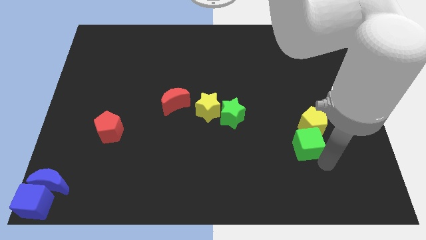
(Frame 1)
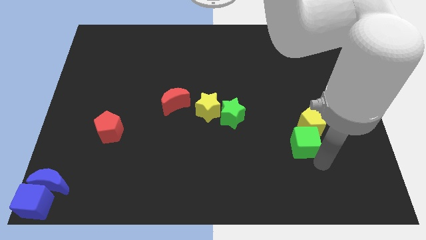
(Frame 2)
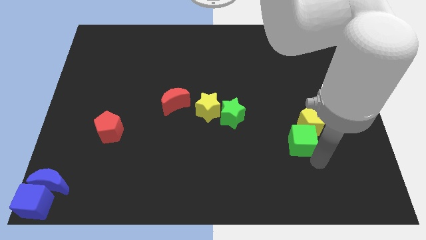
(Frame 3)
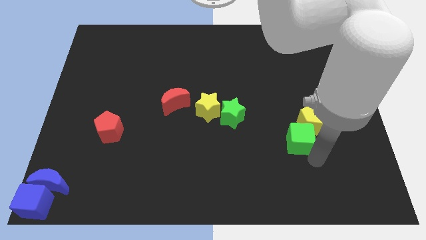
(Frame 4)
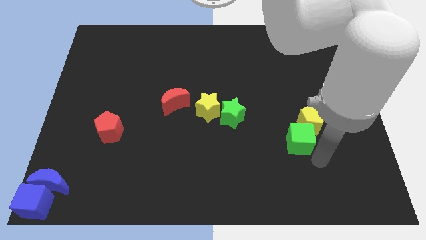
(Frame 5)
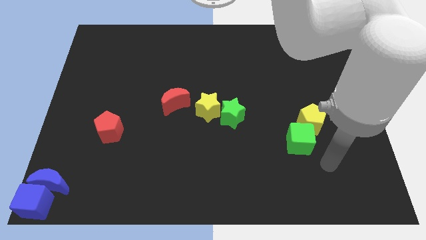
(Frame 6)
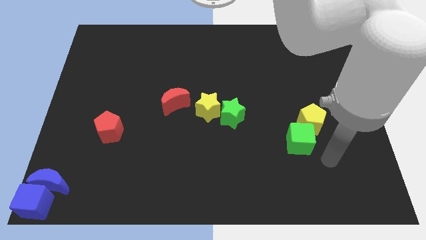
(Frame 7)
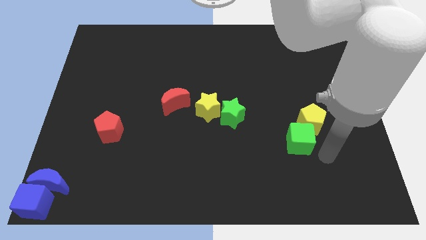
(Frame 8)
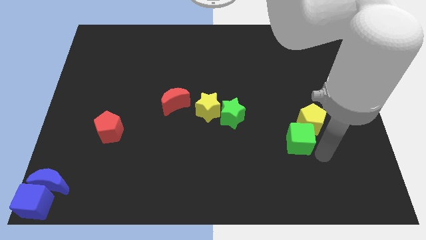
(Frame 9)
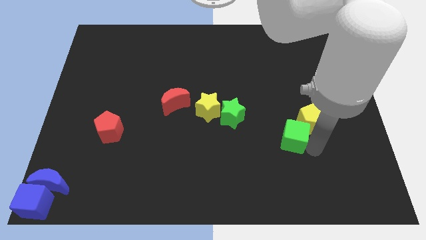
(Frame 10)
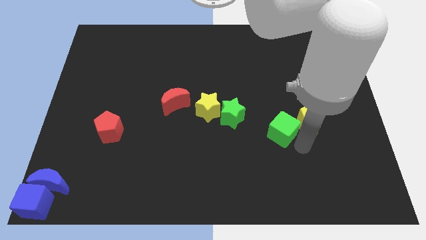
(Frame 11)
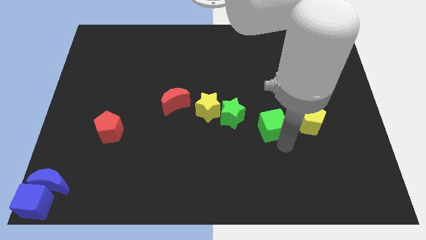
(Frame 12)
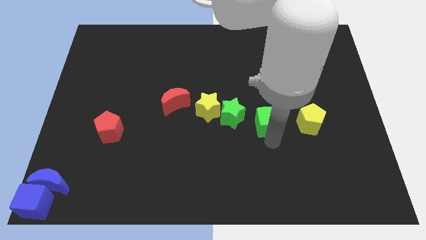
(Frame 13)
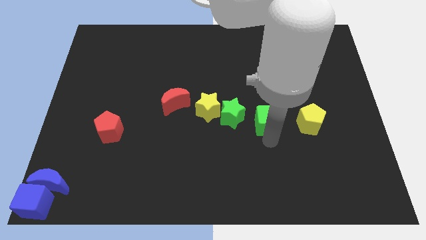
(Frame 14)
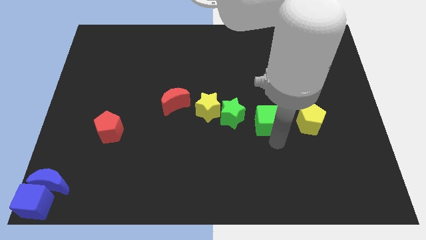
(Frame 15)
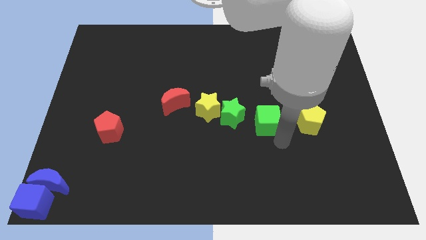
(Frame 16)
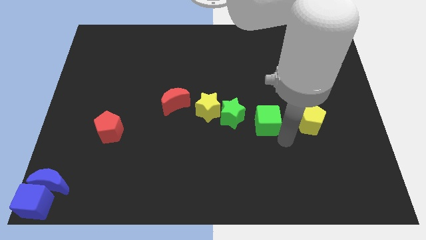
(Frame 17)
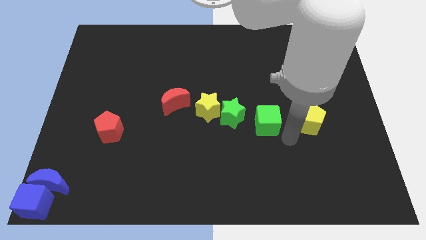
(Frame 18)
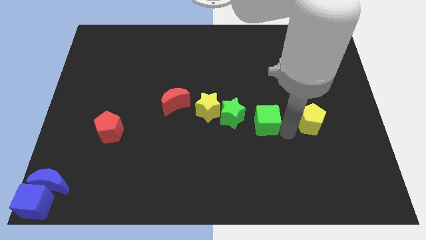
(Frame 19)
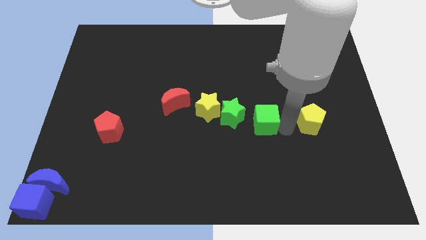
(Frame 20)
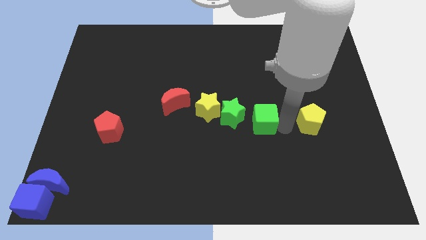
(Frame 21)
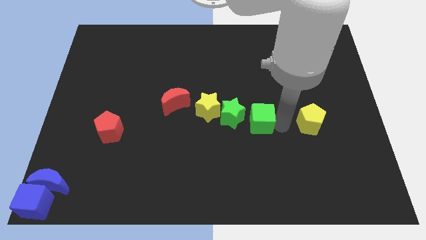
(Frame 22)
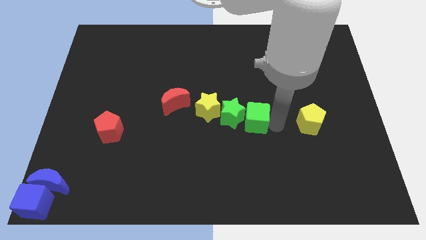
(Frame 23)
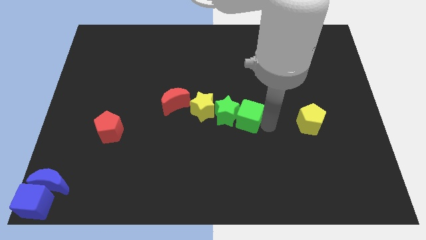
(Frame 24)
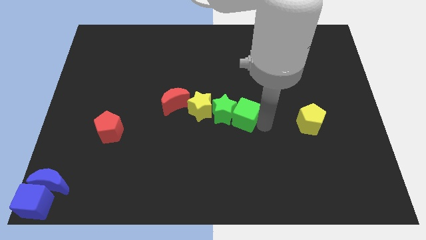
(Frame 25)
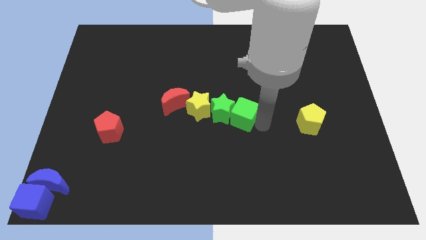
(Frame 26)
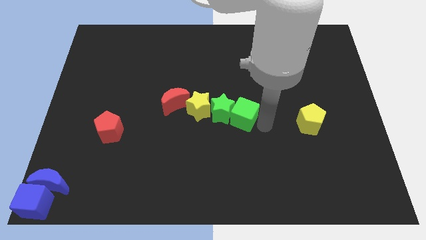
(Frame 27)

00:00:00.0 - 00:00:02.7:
push the green cube into the green star at the center

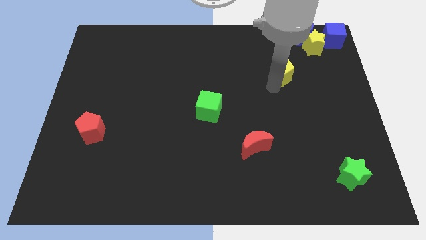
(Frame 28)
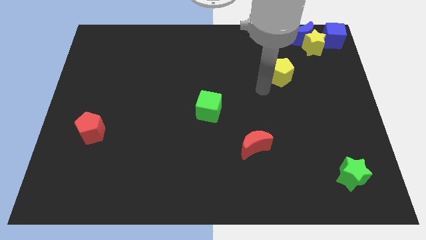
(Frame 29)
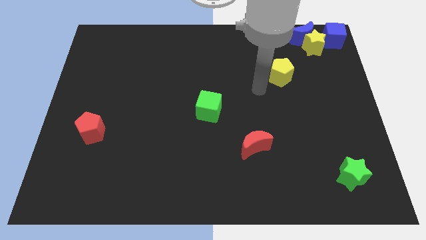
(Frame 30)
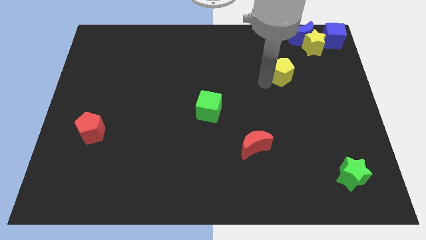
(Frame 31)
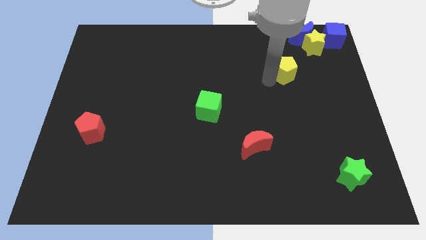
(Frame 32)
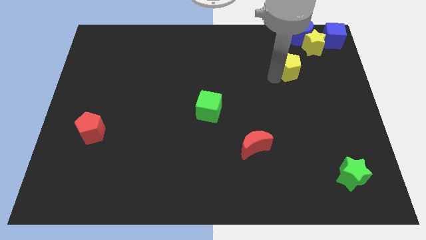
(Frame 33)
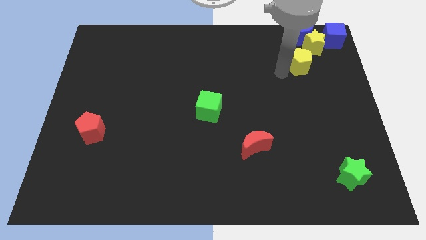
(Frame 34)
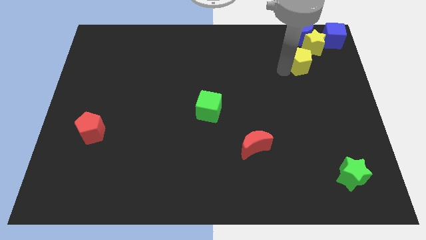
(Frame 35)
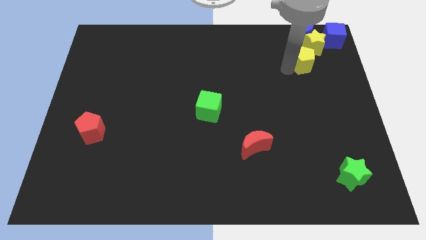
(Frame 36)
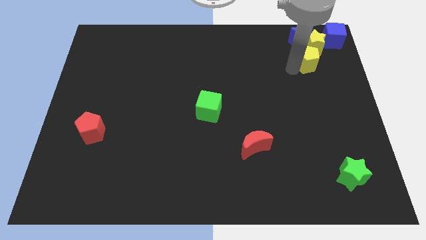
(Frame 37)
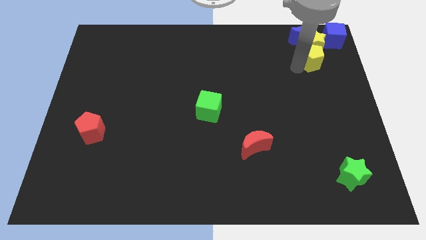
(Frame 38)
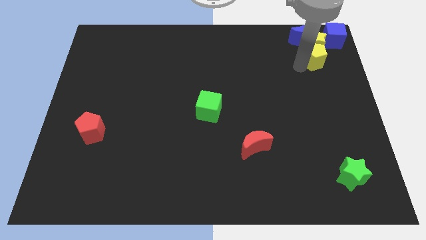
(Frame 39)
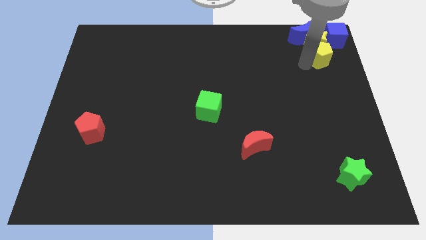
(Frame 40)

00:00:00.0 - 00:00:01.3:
move the yellow pentagon to the bottom of the yellow star

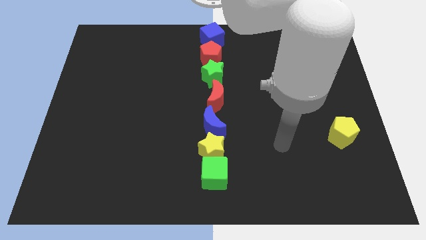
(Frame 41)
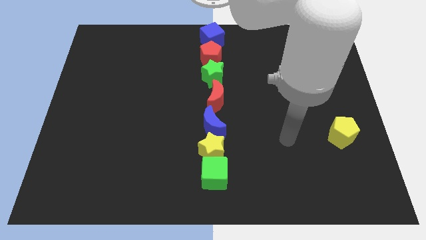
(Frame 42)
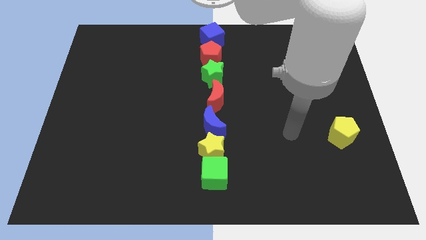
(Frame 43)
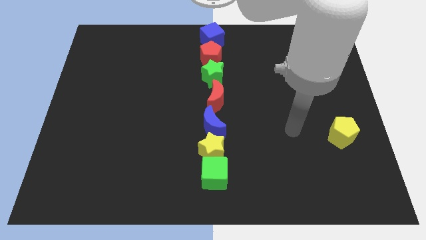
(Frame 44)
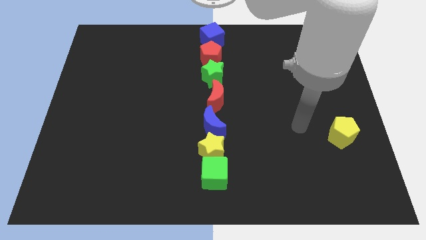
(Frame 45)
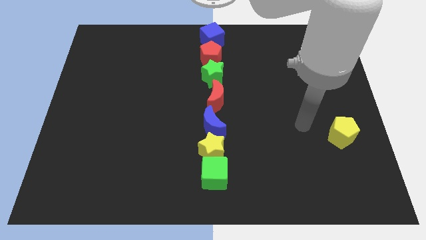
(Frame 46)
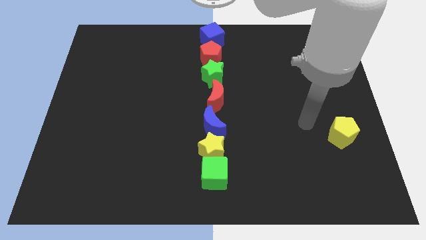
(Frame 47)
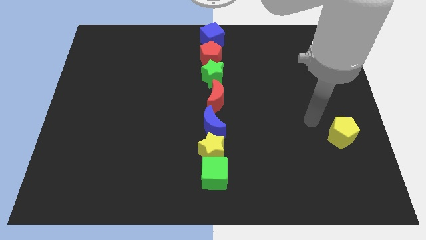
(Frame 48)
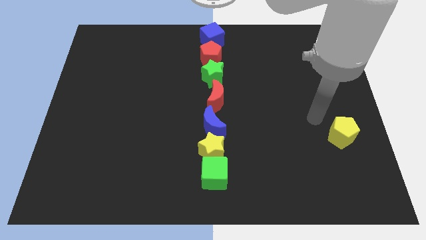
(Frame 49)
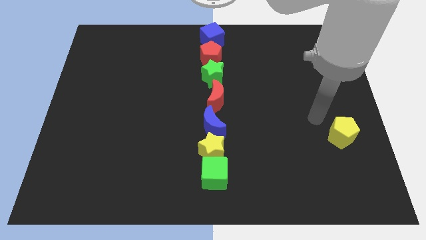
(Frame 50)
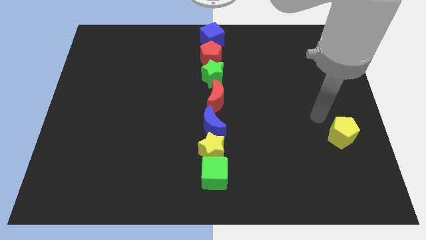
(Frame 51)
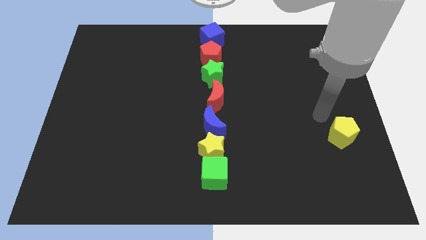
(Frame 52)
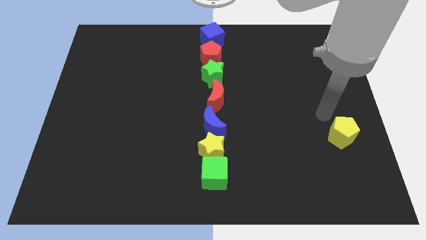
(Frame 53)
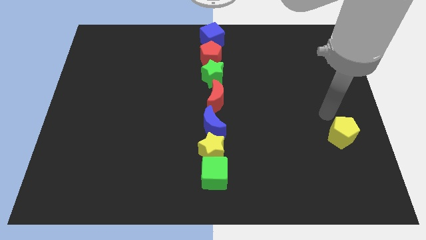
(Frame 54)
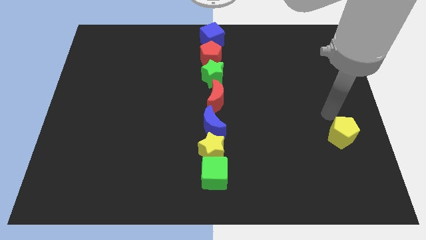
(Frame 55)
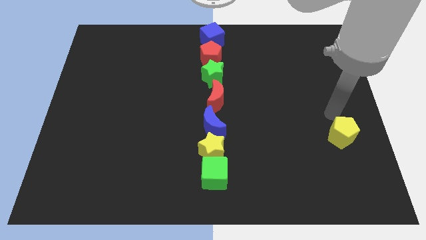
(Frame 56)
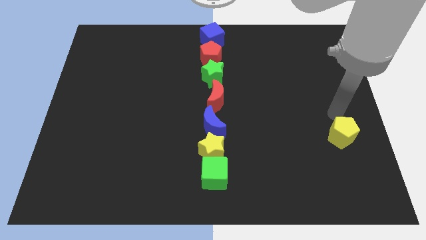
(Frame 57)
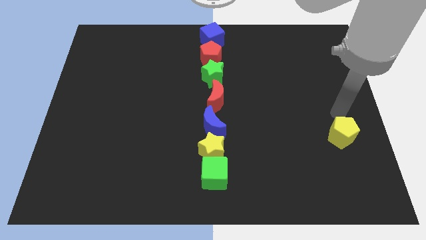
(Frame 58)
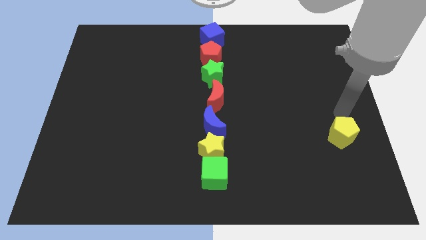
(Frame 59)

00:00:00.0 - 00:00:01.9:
move your arm to the top of the yellow pentagon

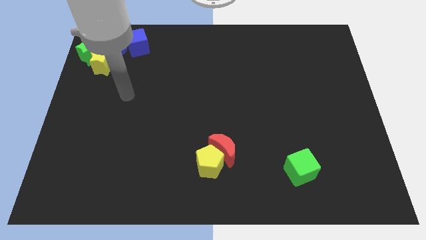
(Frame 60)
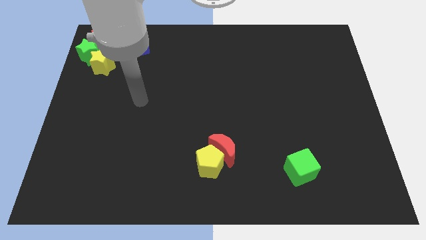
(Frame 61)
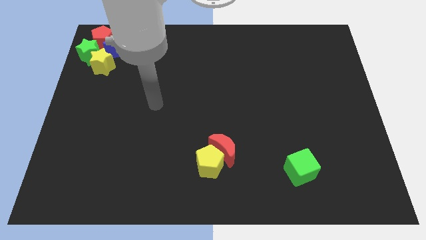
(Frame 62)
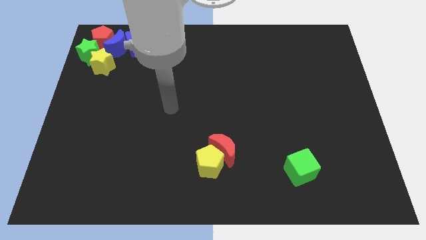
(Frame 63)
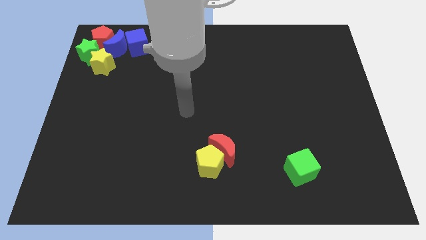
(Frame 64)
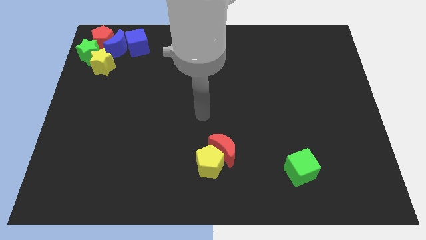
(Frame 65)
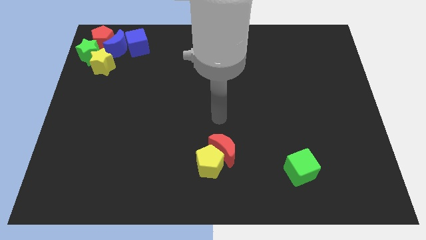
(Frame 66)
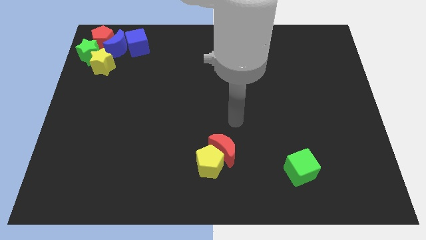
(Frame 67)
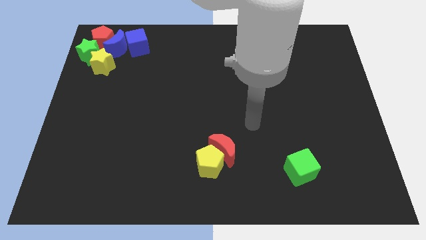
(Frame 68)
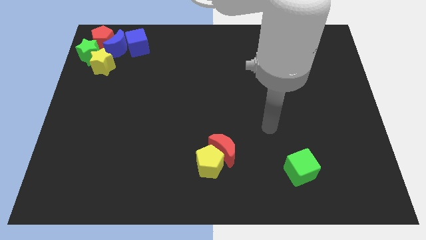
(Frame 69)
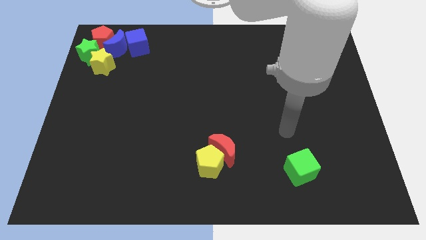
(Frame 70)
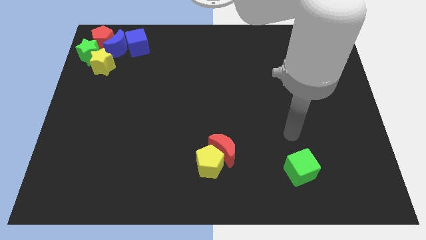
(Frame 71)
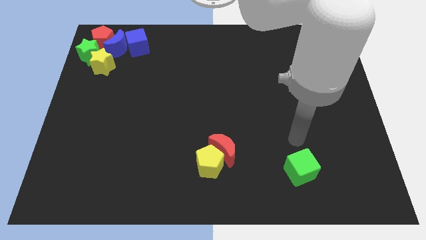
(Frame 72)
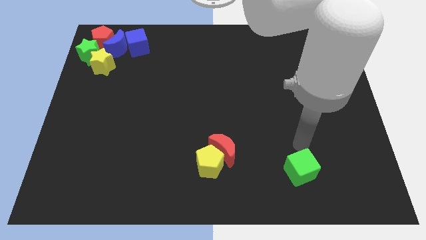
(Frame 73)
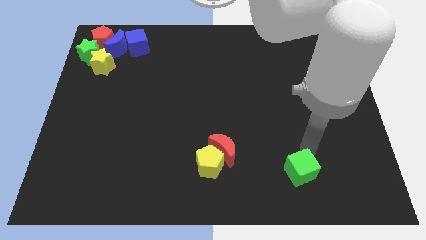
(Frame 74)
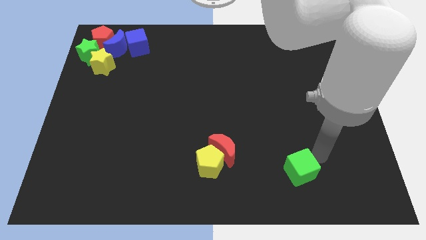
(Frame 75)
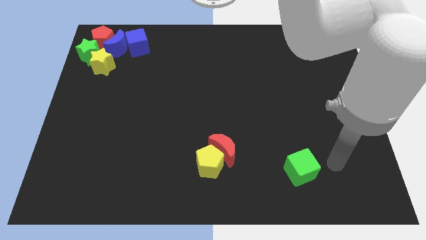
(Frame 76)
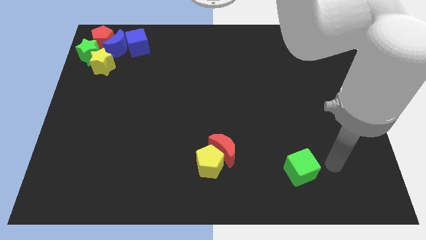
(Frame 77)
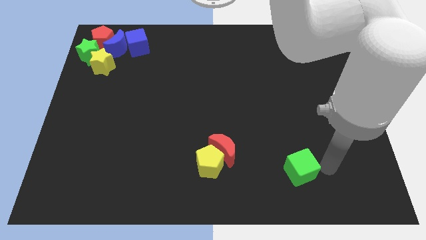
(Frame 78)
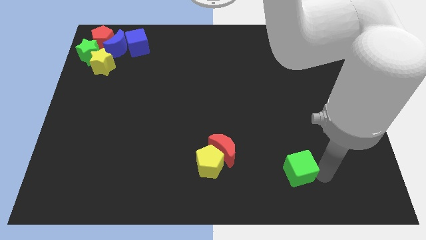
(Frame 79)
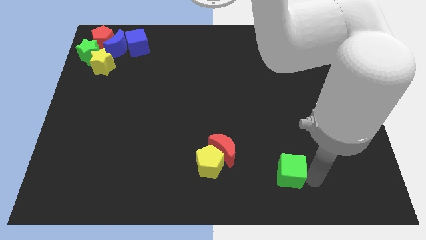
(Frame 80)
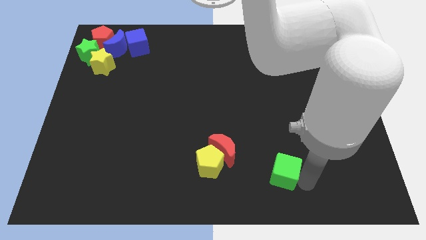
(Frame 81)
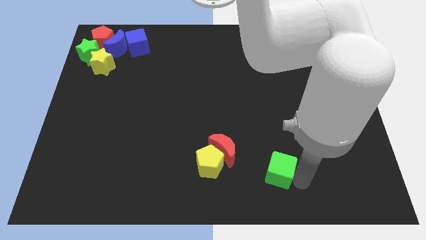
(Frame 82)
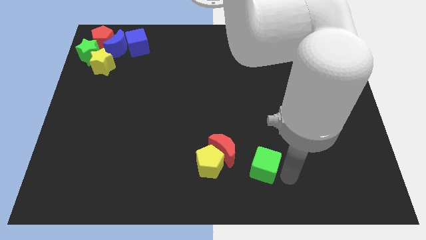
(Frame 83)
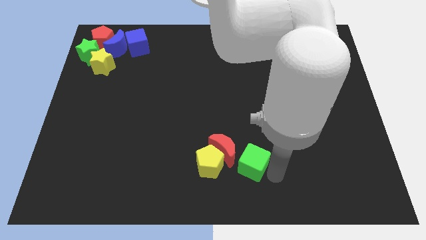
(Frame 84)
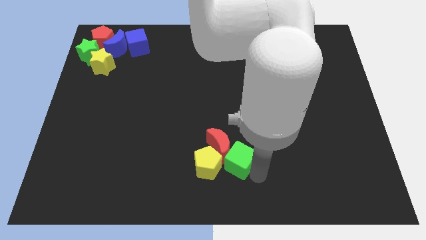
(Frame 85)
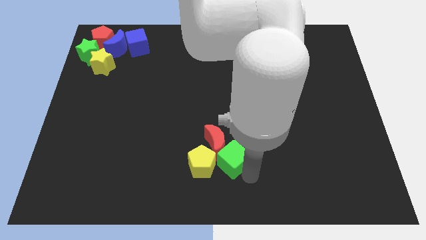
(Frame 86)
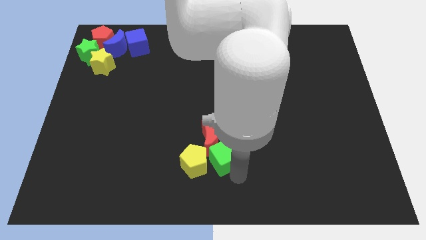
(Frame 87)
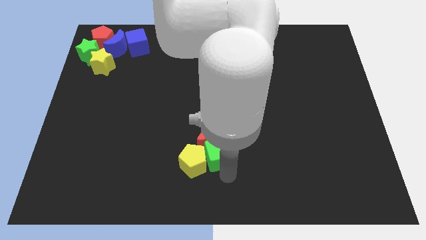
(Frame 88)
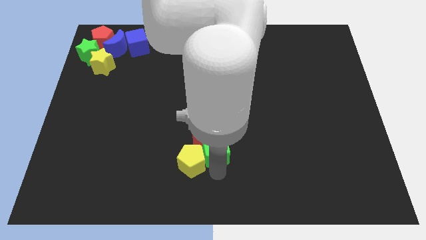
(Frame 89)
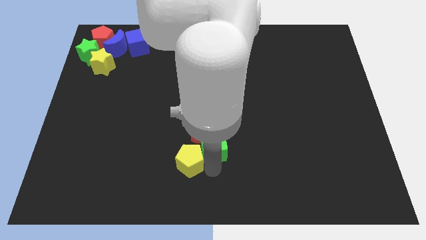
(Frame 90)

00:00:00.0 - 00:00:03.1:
move the green cube into the red moon and the yellow pentagon

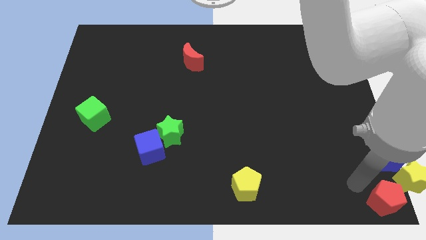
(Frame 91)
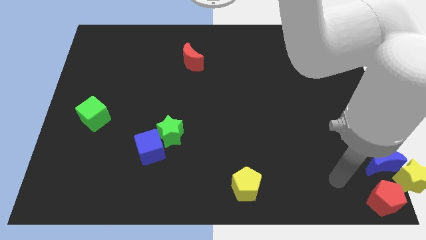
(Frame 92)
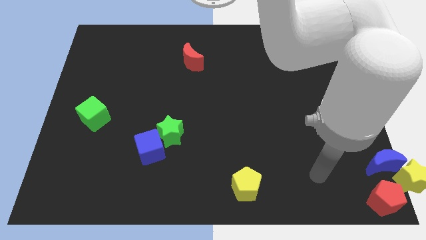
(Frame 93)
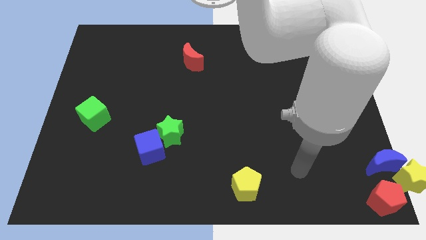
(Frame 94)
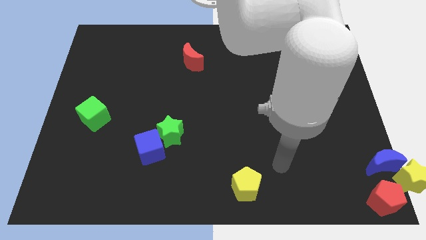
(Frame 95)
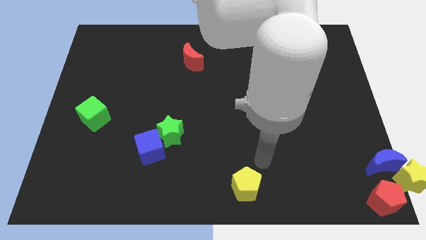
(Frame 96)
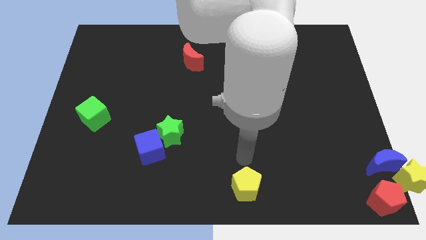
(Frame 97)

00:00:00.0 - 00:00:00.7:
move your arm above the yellow pentagon
